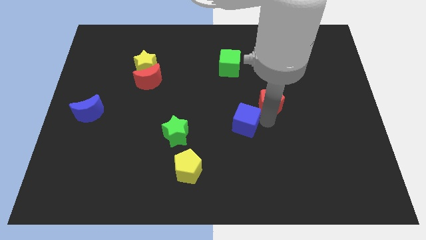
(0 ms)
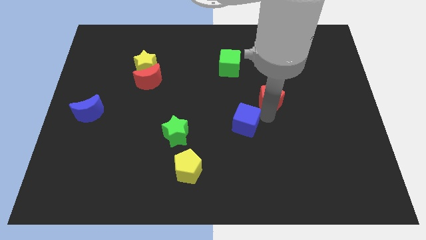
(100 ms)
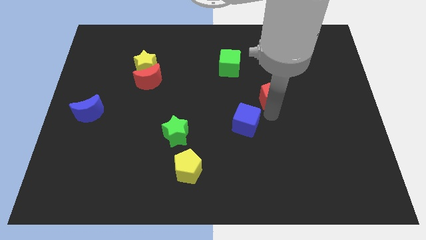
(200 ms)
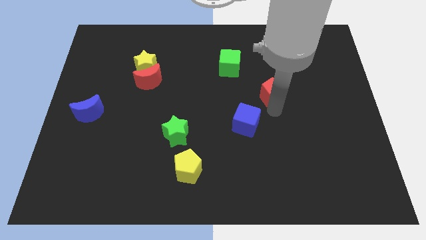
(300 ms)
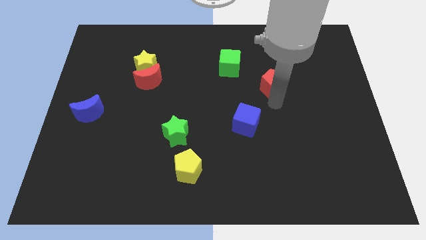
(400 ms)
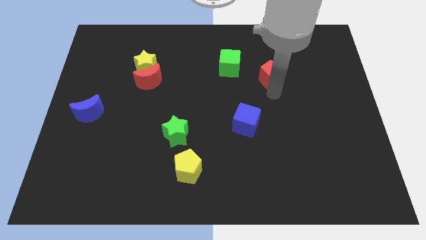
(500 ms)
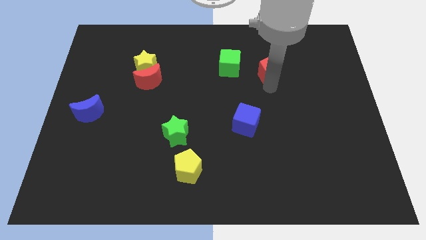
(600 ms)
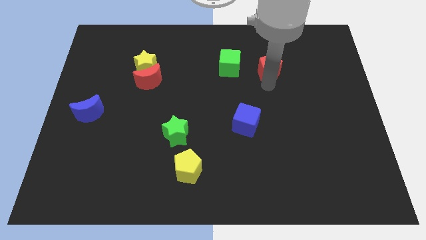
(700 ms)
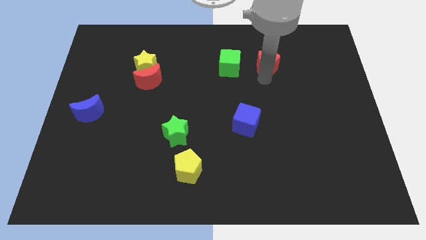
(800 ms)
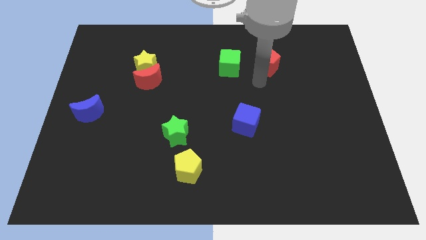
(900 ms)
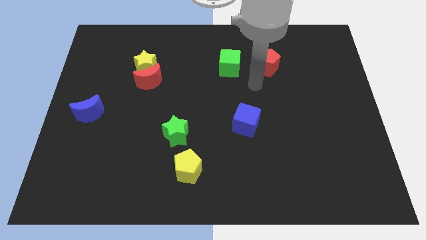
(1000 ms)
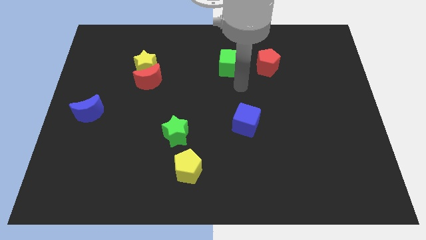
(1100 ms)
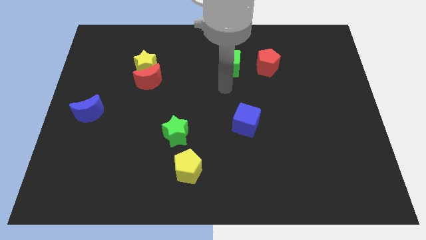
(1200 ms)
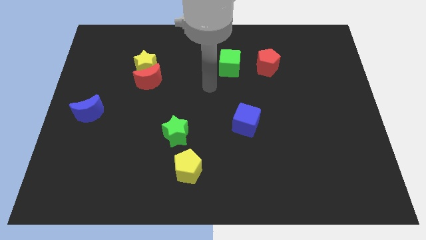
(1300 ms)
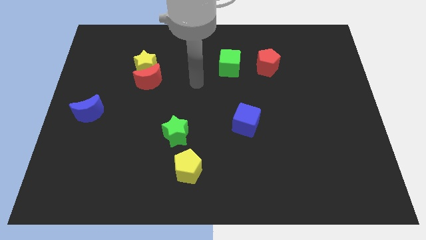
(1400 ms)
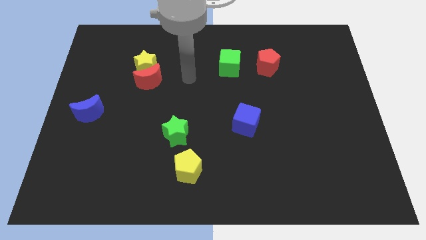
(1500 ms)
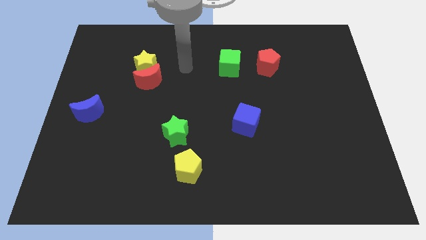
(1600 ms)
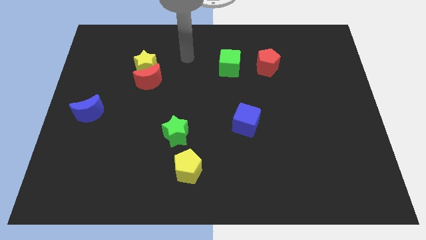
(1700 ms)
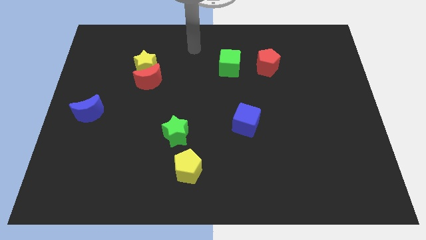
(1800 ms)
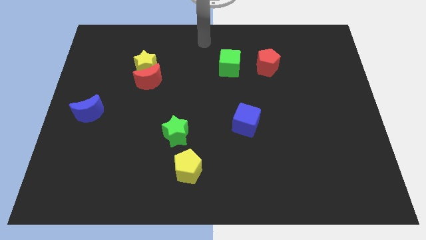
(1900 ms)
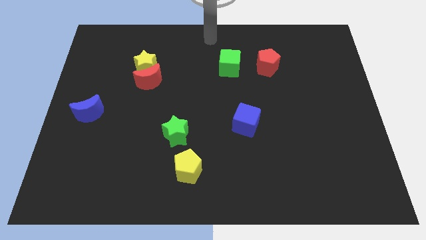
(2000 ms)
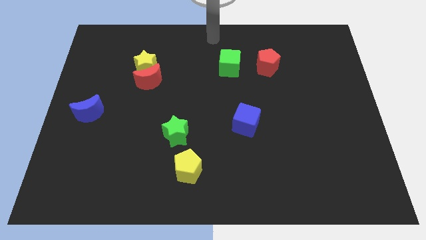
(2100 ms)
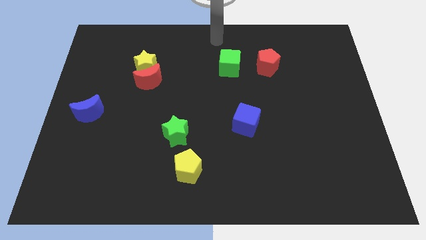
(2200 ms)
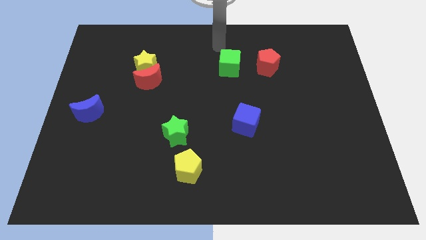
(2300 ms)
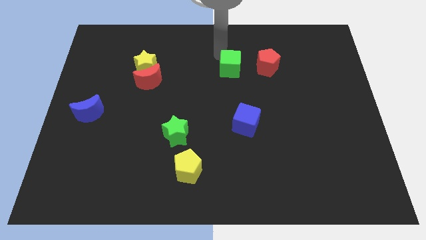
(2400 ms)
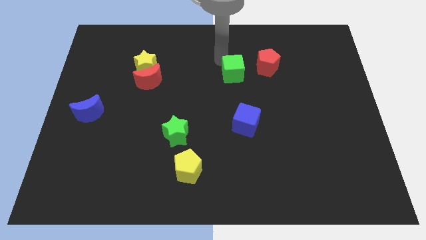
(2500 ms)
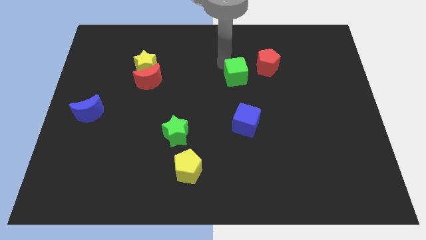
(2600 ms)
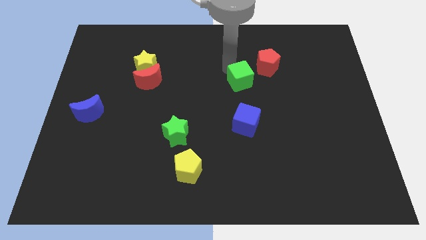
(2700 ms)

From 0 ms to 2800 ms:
place the red pentagon right to the green cube

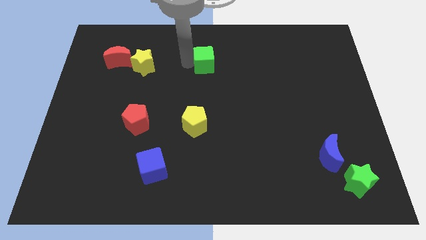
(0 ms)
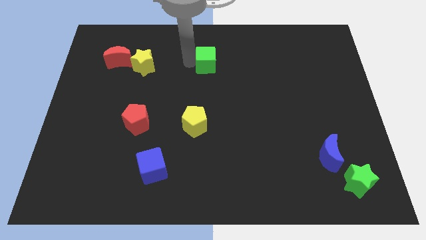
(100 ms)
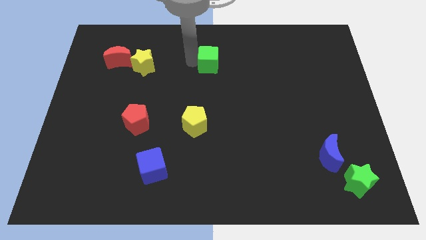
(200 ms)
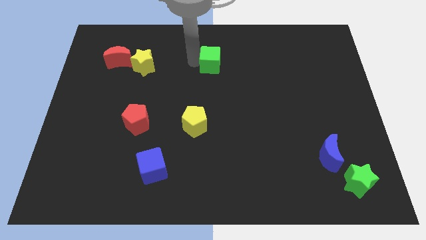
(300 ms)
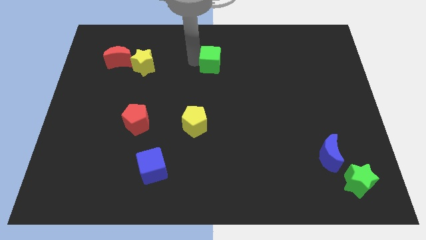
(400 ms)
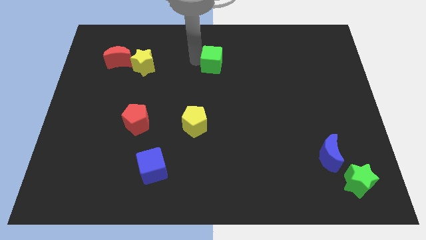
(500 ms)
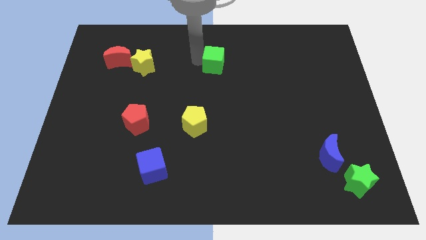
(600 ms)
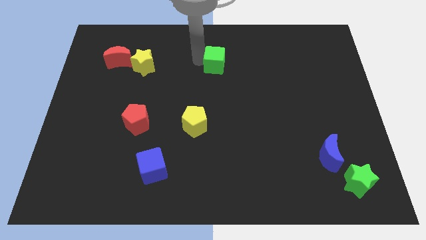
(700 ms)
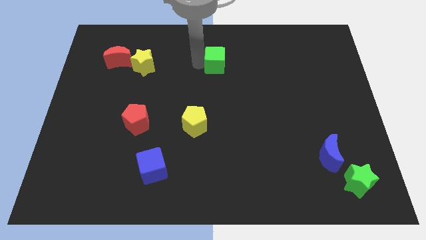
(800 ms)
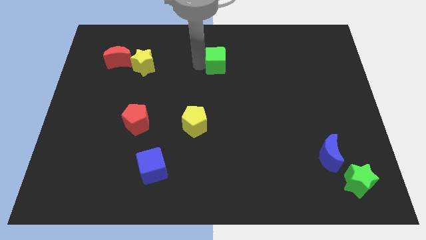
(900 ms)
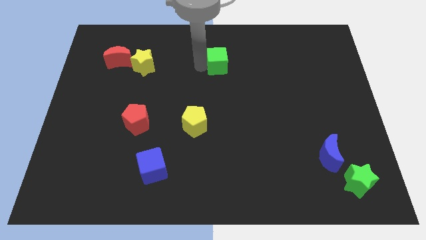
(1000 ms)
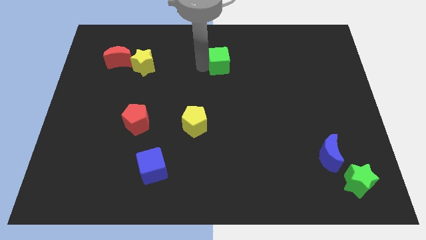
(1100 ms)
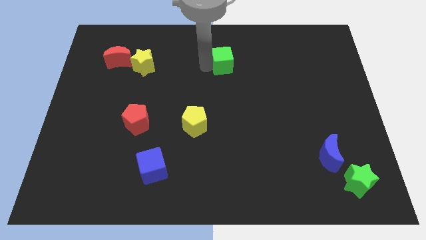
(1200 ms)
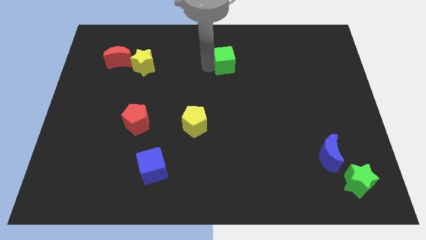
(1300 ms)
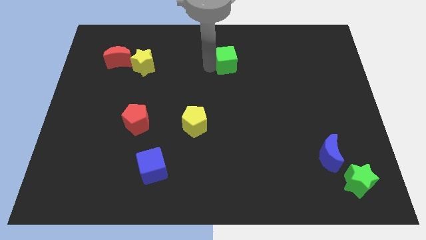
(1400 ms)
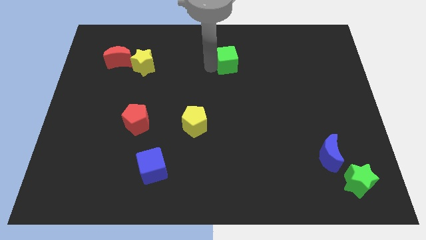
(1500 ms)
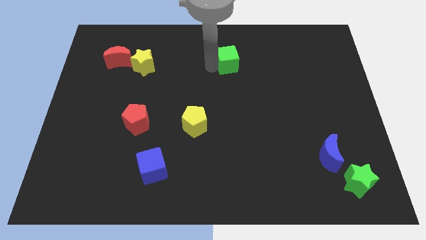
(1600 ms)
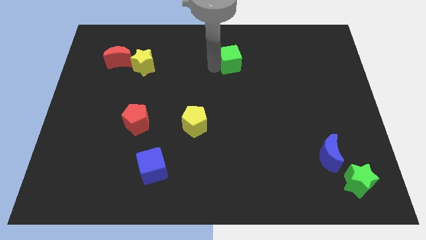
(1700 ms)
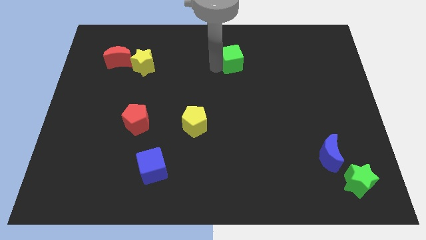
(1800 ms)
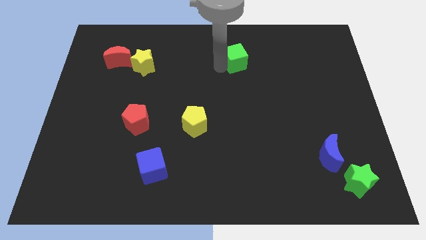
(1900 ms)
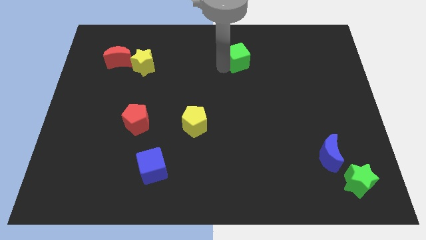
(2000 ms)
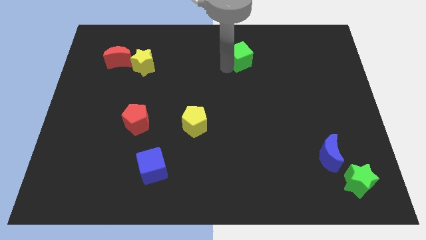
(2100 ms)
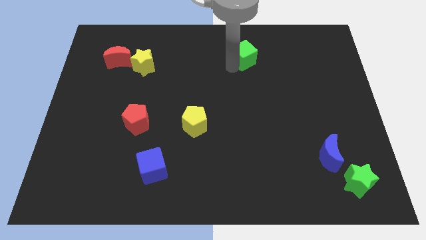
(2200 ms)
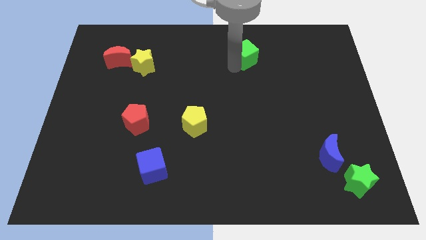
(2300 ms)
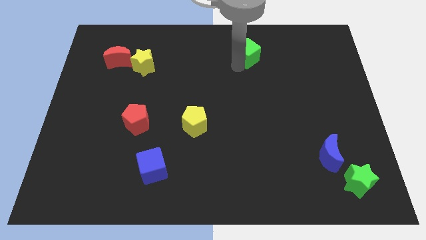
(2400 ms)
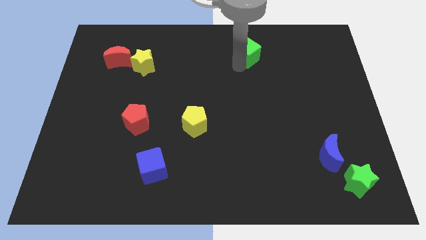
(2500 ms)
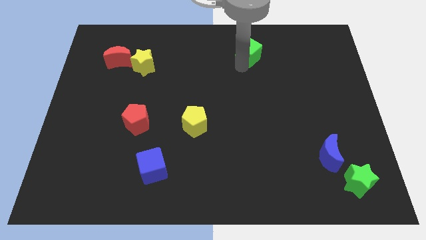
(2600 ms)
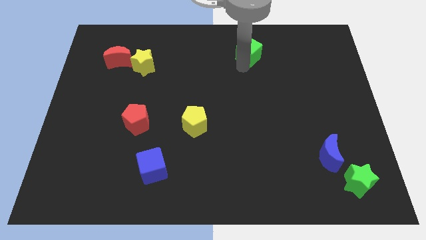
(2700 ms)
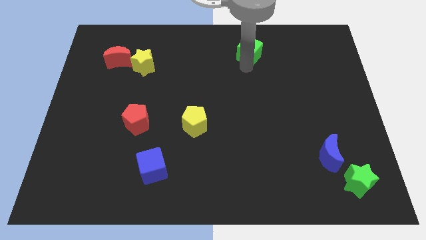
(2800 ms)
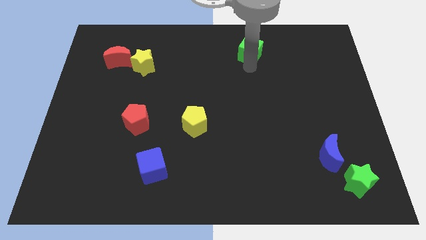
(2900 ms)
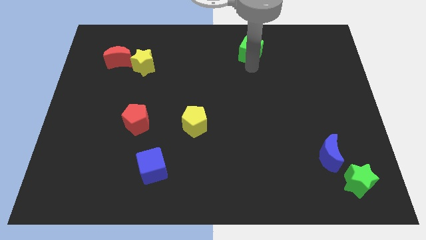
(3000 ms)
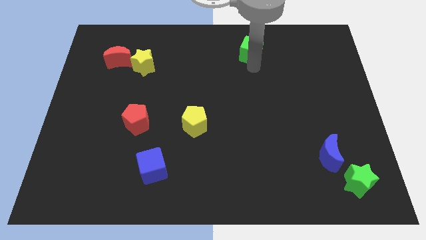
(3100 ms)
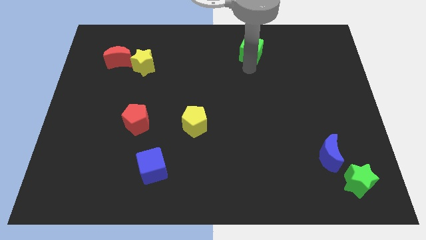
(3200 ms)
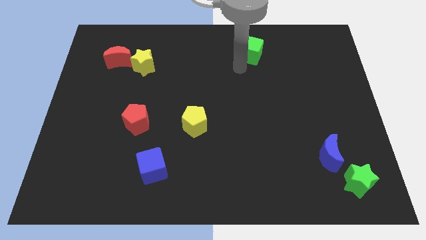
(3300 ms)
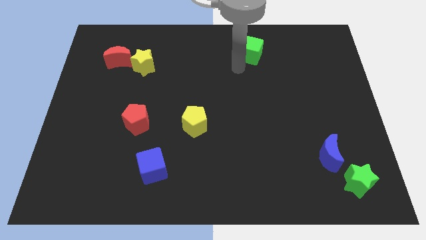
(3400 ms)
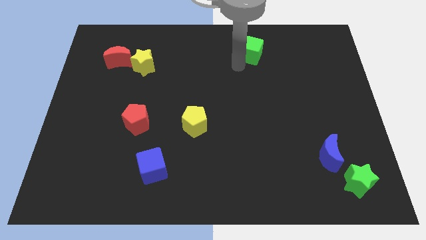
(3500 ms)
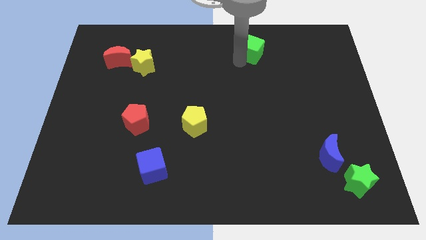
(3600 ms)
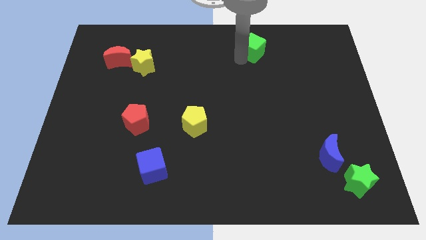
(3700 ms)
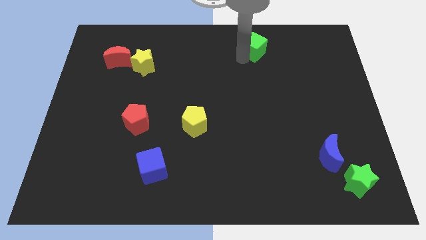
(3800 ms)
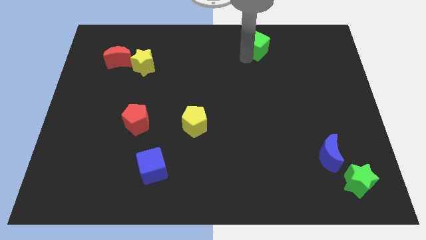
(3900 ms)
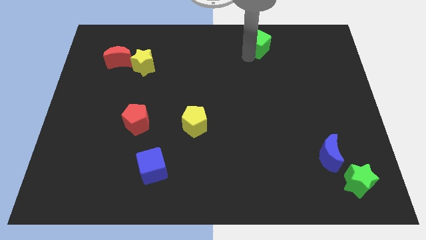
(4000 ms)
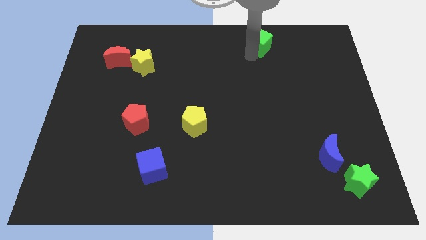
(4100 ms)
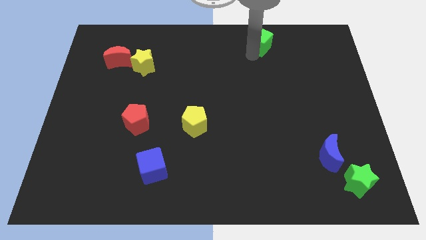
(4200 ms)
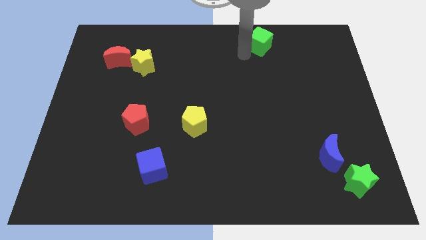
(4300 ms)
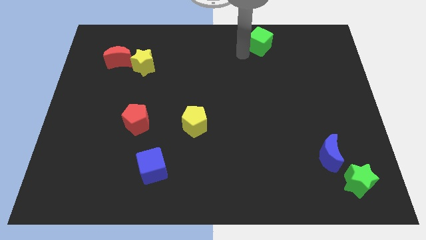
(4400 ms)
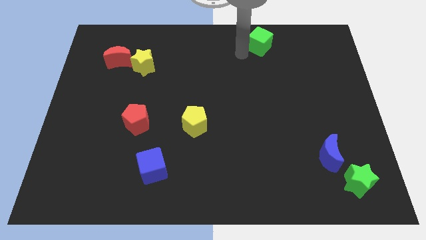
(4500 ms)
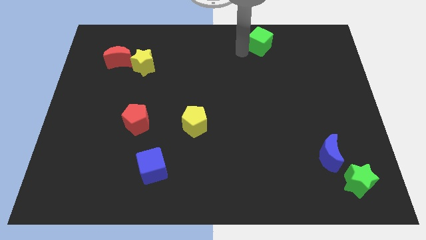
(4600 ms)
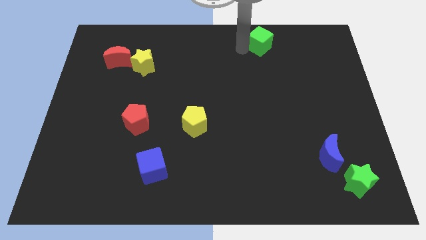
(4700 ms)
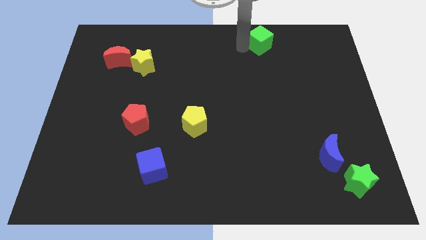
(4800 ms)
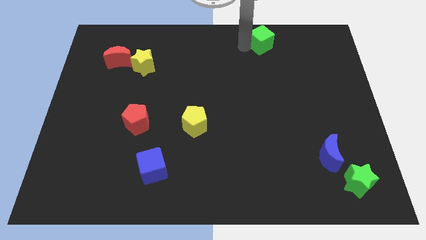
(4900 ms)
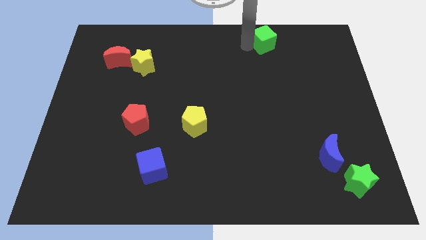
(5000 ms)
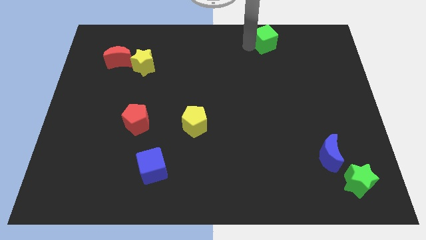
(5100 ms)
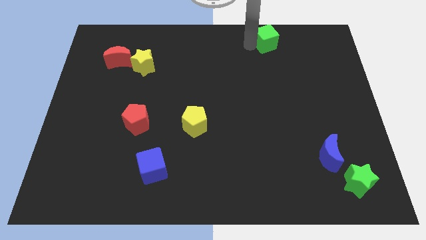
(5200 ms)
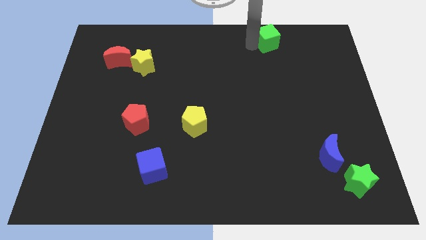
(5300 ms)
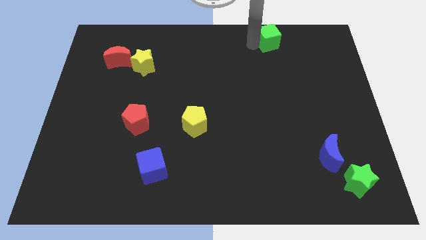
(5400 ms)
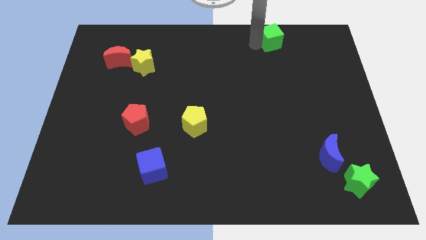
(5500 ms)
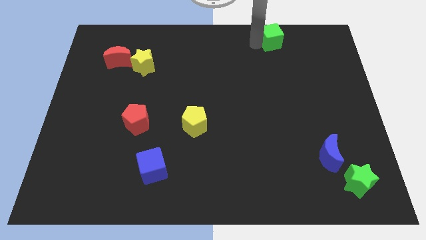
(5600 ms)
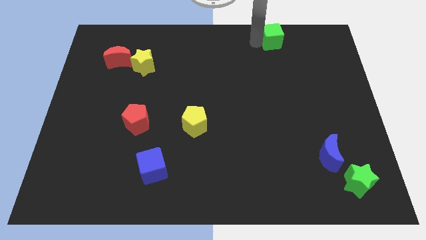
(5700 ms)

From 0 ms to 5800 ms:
move green cube towards top right side of the board

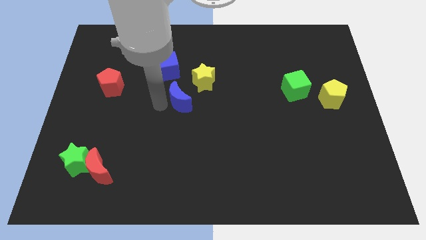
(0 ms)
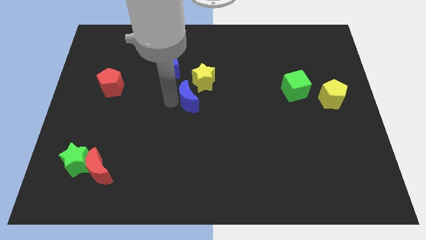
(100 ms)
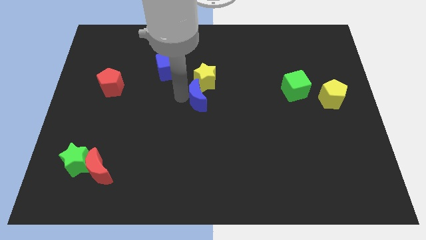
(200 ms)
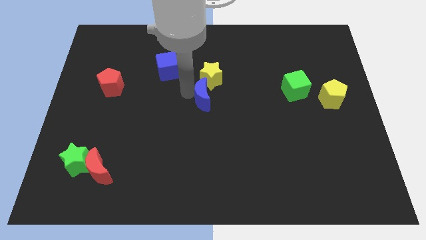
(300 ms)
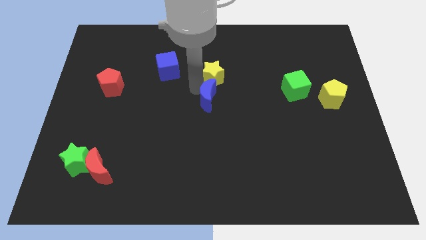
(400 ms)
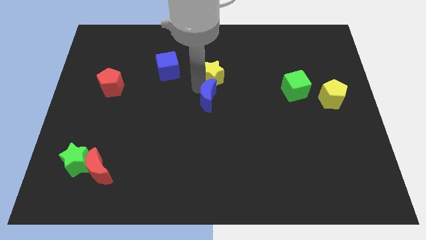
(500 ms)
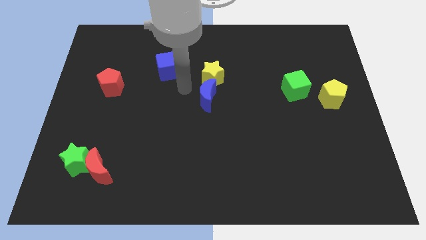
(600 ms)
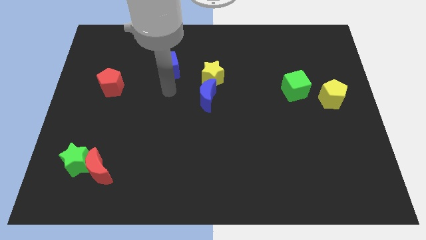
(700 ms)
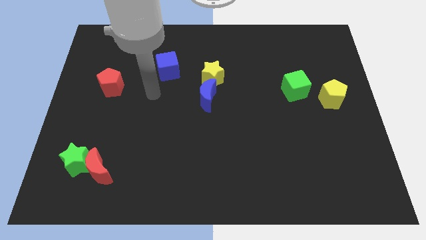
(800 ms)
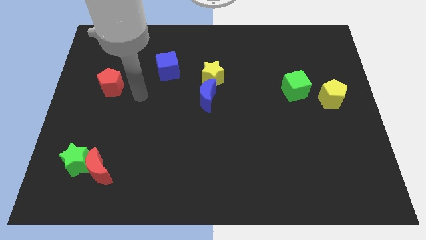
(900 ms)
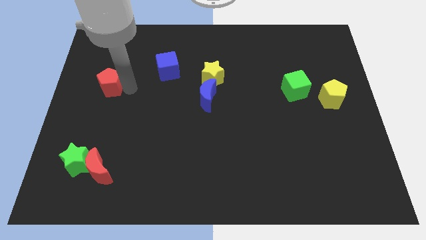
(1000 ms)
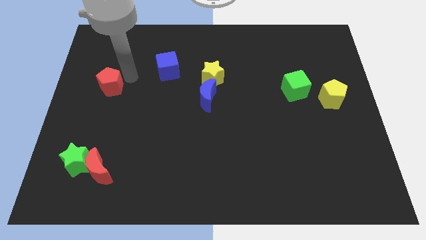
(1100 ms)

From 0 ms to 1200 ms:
place the blue block on the left side of the yellow star
